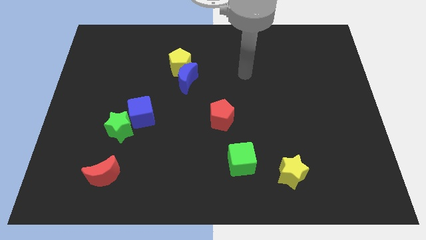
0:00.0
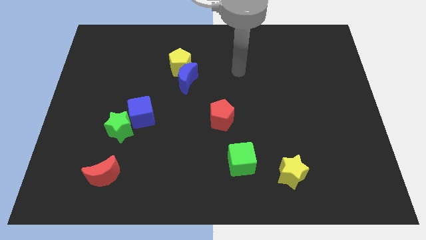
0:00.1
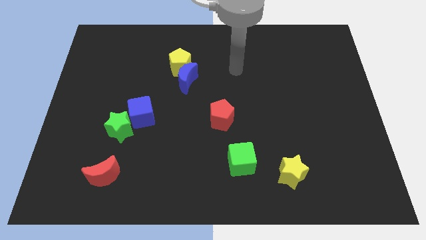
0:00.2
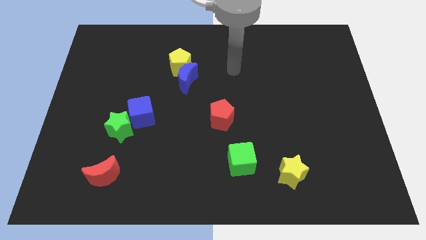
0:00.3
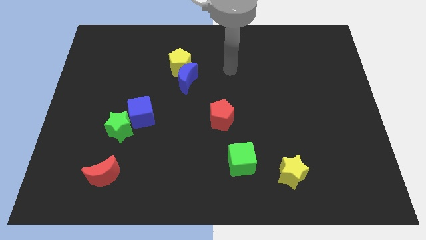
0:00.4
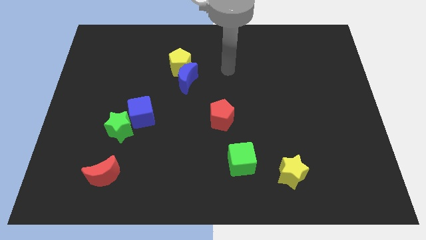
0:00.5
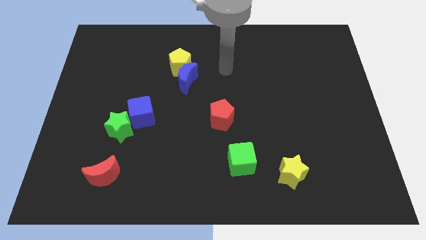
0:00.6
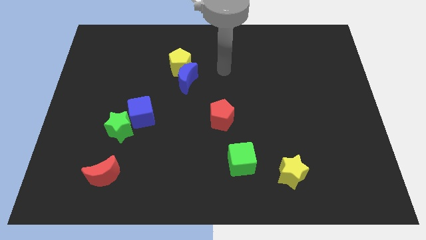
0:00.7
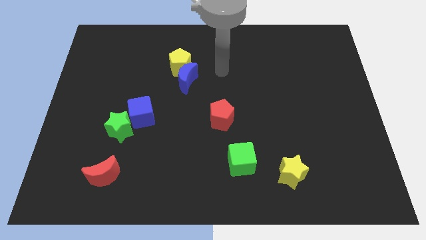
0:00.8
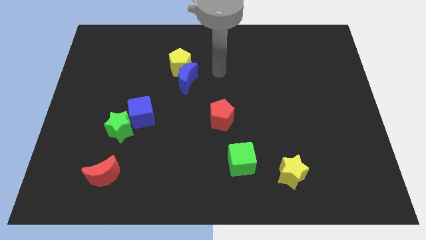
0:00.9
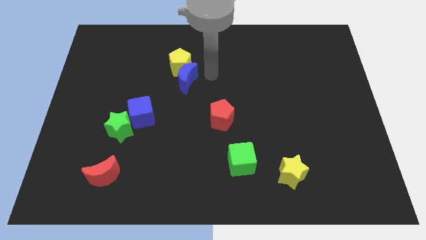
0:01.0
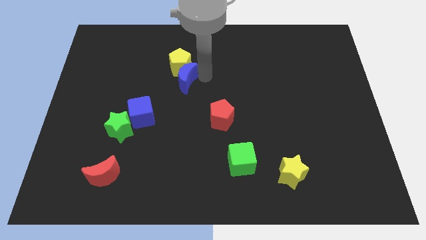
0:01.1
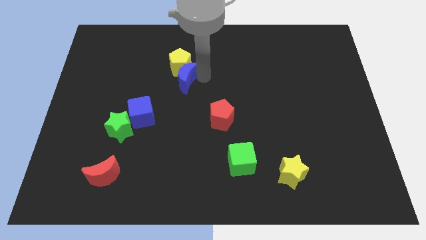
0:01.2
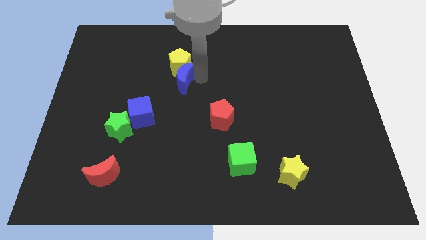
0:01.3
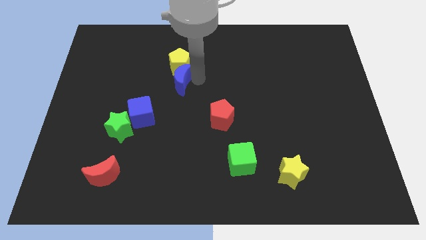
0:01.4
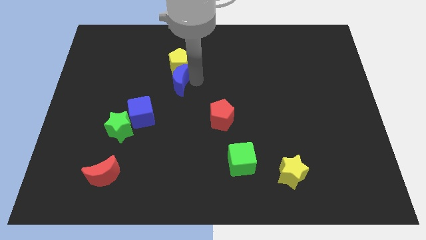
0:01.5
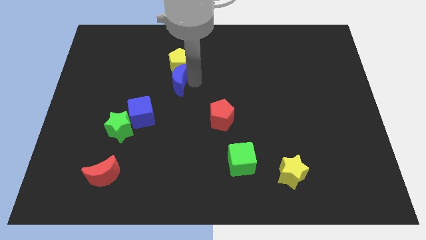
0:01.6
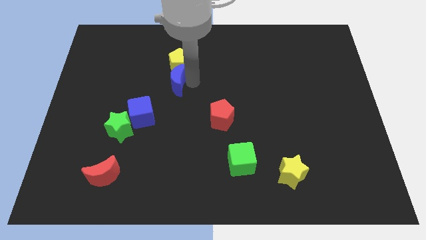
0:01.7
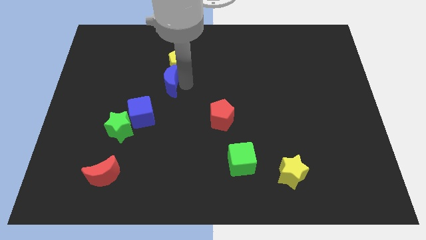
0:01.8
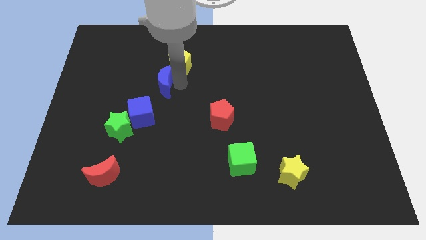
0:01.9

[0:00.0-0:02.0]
slightly push the blue crescent

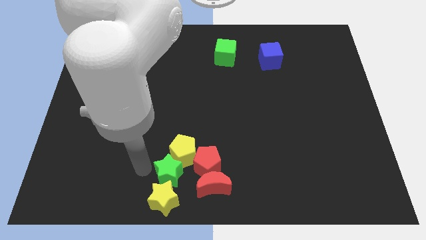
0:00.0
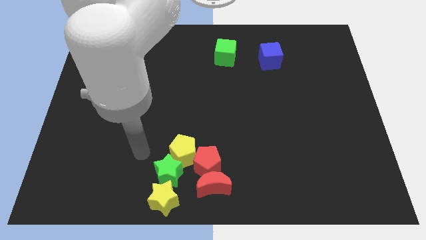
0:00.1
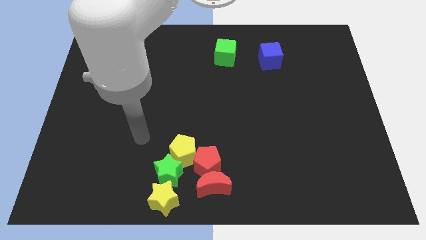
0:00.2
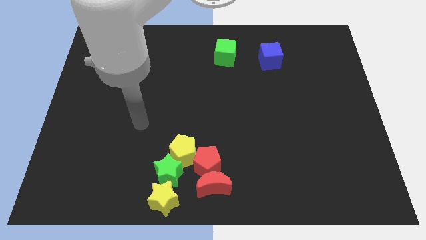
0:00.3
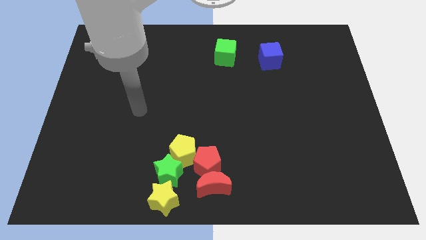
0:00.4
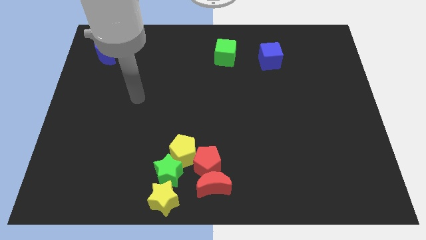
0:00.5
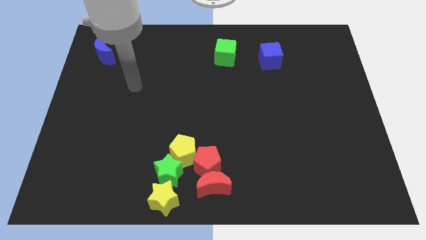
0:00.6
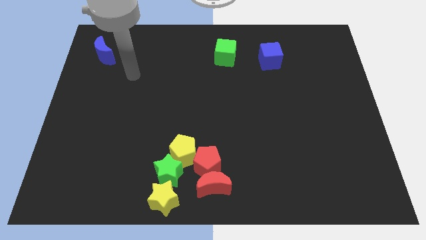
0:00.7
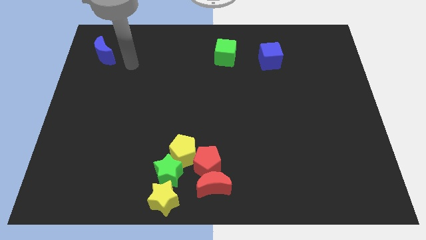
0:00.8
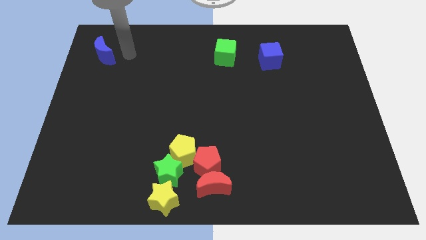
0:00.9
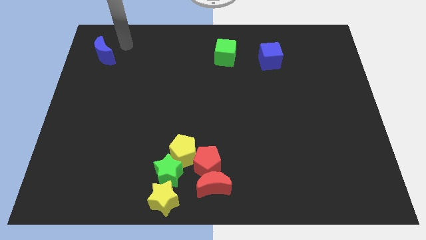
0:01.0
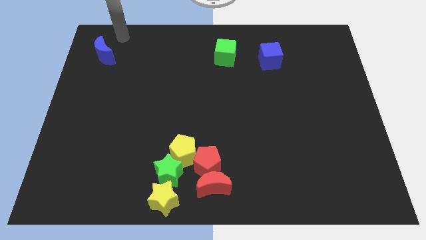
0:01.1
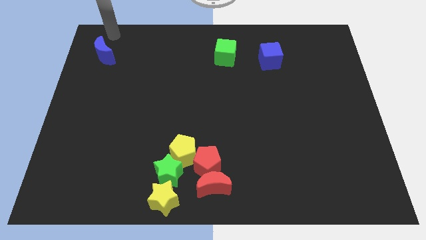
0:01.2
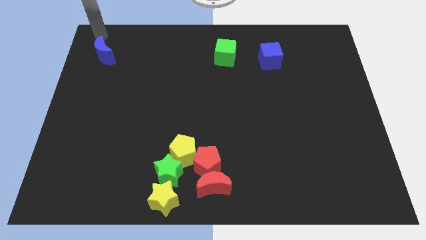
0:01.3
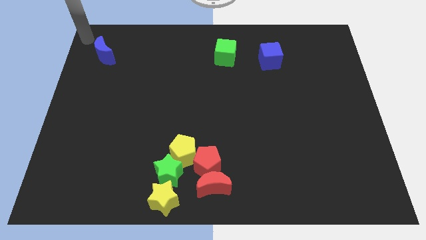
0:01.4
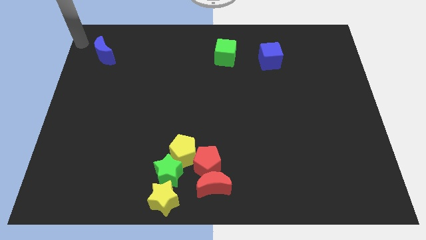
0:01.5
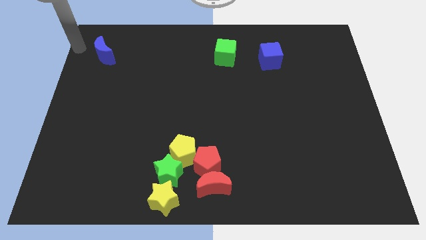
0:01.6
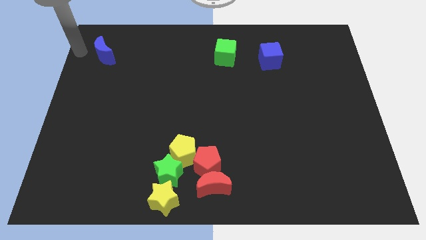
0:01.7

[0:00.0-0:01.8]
move your arm towards blue crescent

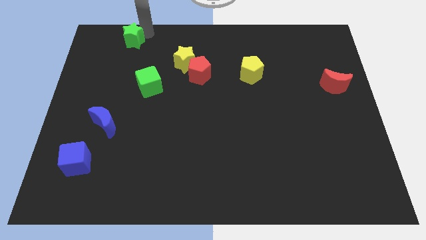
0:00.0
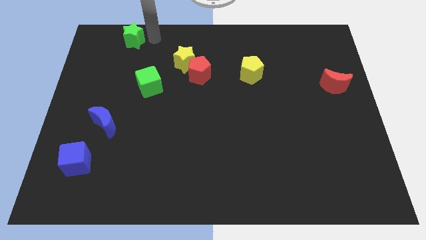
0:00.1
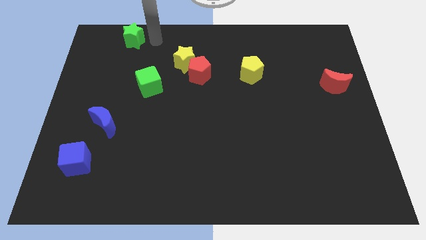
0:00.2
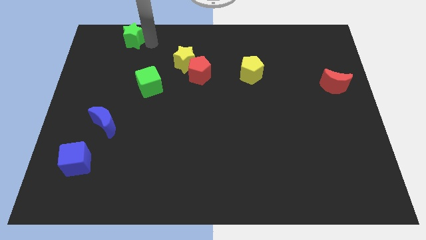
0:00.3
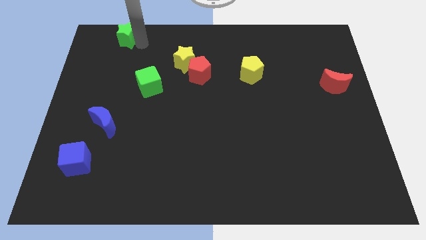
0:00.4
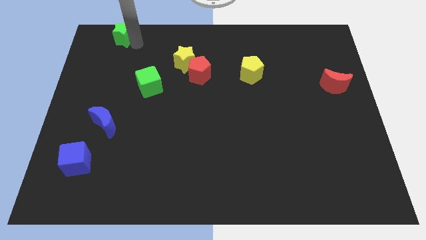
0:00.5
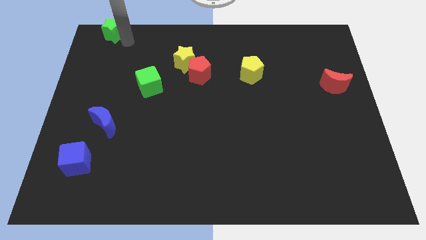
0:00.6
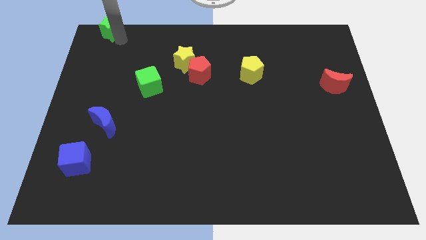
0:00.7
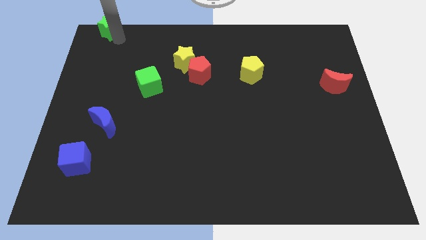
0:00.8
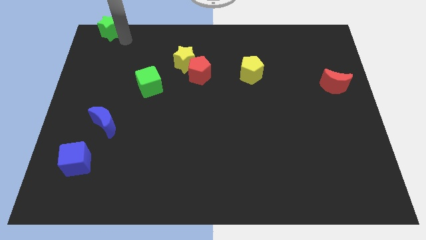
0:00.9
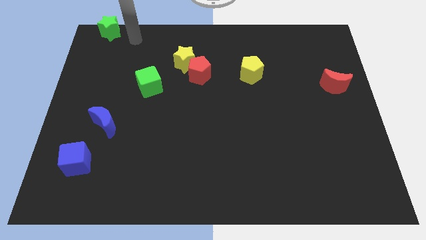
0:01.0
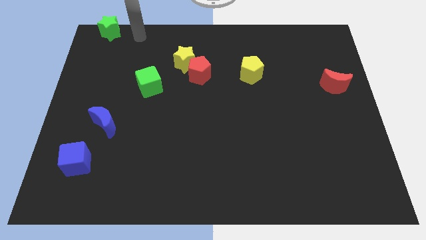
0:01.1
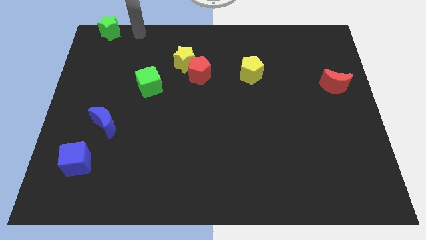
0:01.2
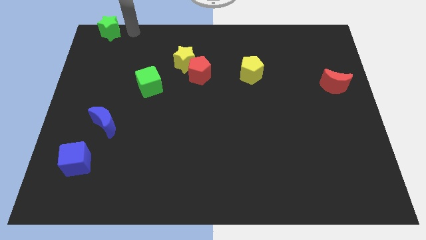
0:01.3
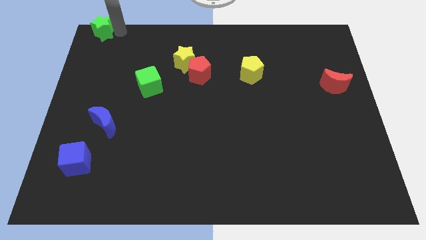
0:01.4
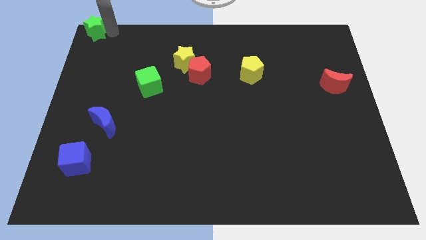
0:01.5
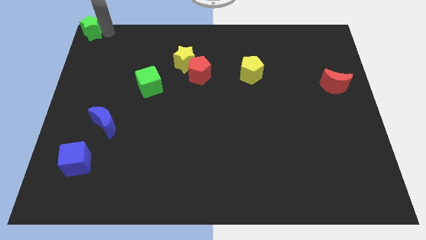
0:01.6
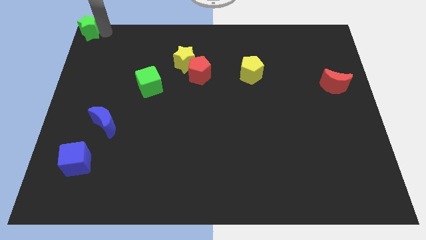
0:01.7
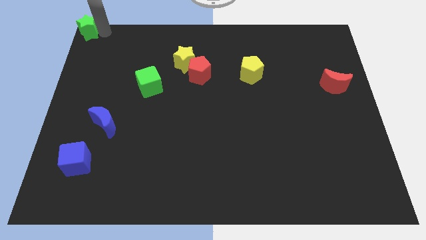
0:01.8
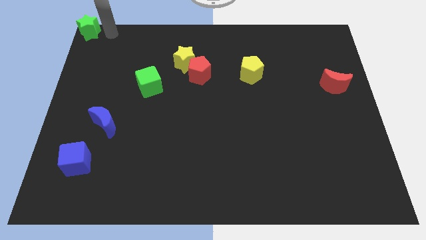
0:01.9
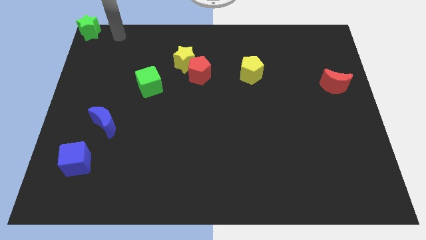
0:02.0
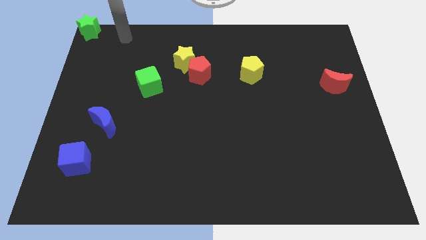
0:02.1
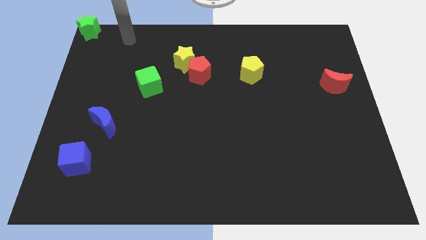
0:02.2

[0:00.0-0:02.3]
push the green star to the top left corner

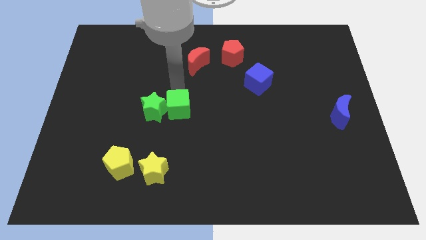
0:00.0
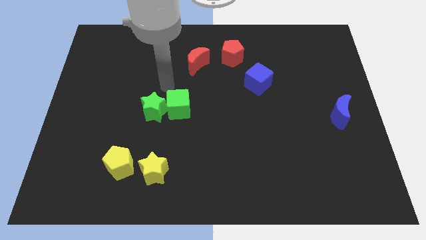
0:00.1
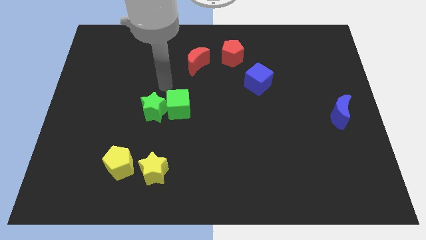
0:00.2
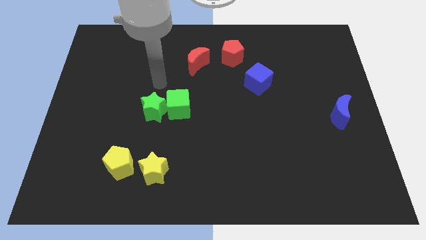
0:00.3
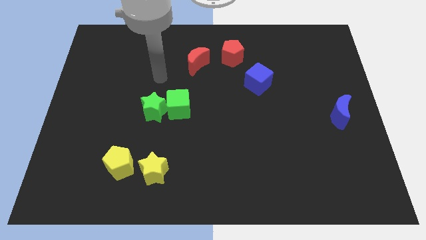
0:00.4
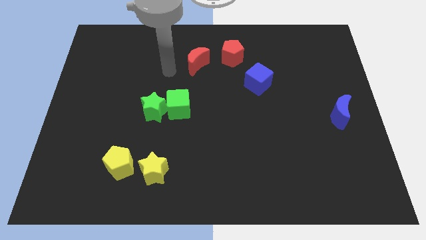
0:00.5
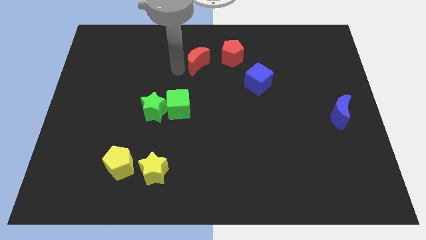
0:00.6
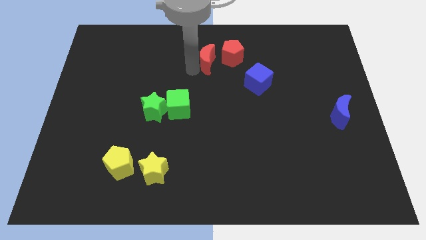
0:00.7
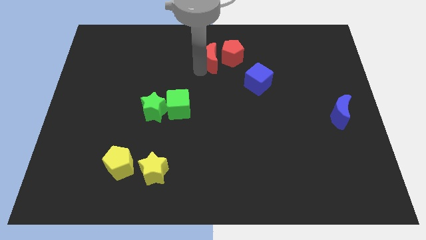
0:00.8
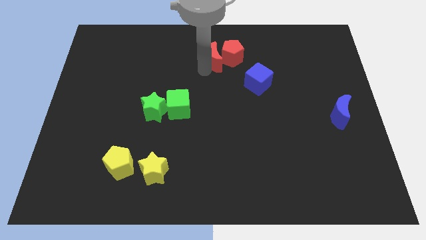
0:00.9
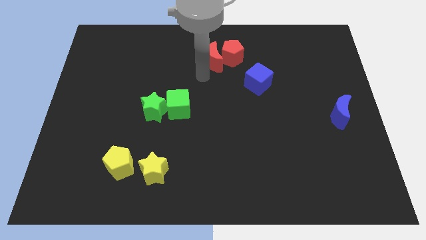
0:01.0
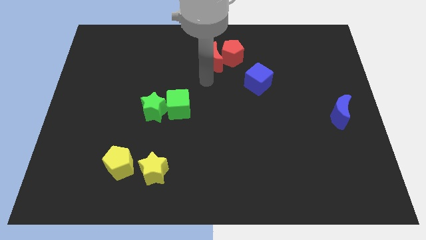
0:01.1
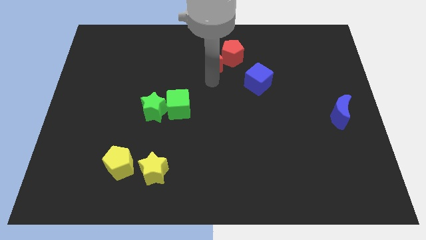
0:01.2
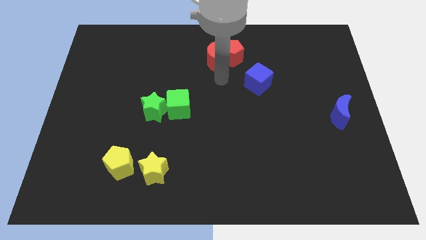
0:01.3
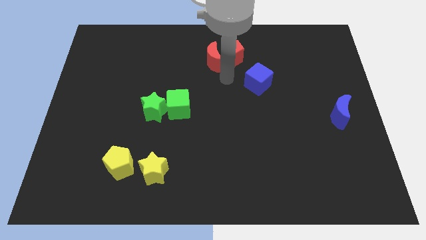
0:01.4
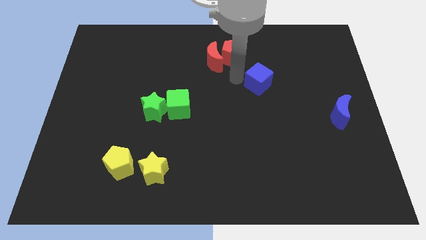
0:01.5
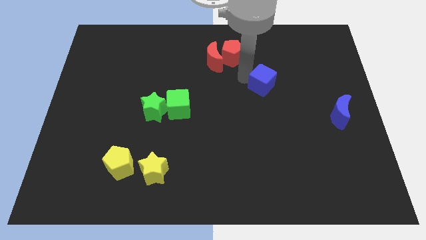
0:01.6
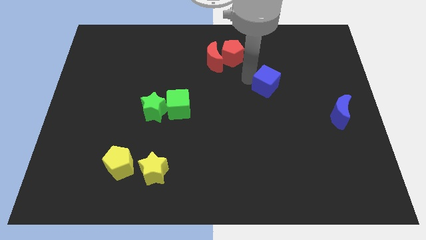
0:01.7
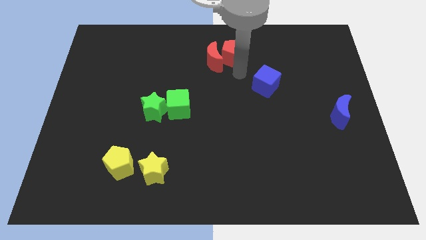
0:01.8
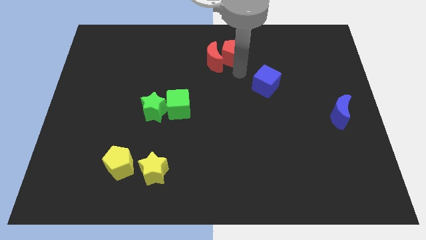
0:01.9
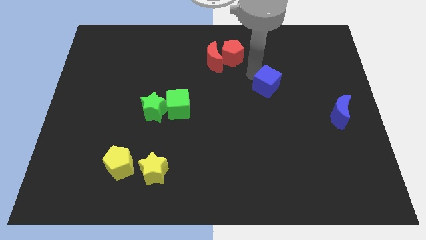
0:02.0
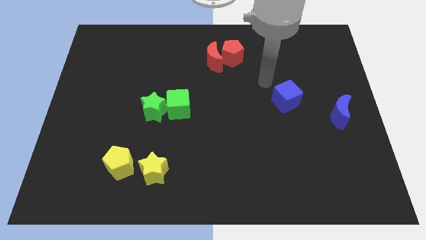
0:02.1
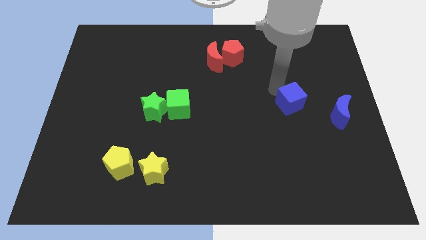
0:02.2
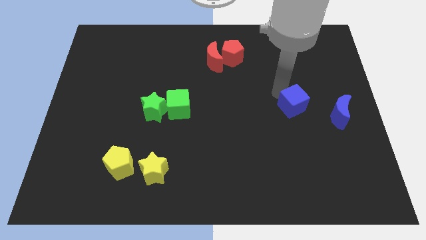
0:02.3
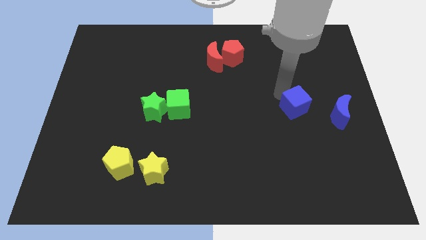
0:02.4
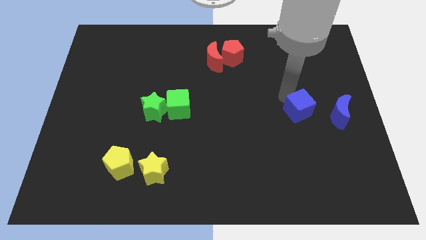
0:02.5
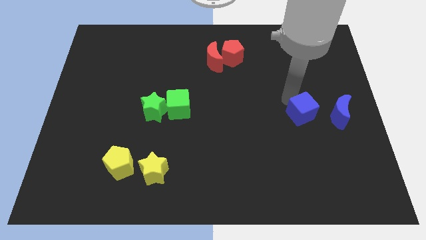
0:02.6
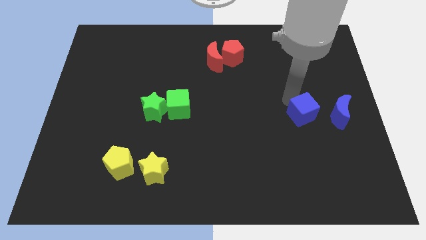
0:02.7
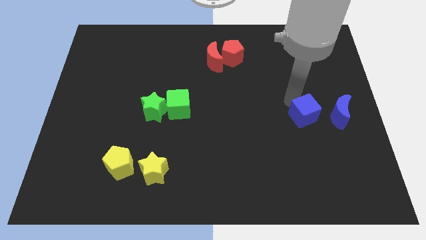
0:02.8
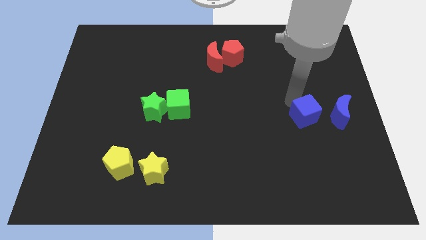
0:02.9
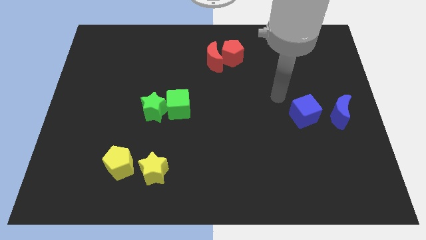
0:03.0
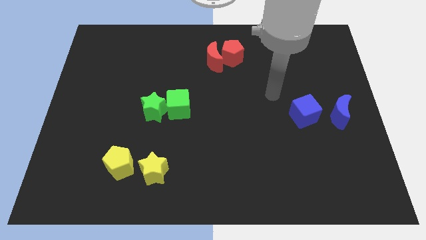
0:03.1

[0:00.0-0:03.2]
move blue cube to the left of blue moon
